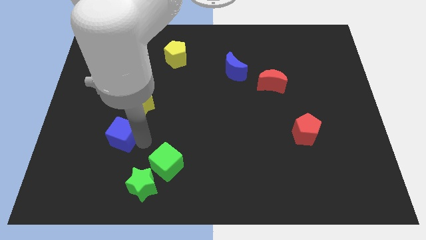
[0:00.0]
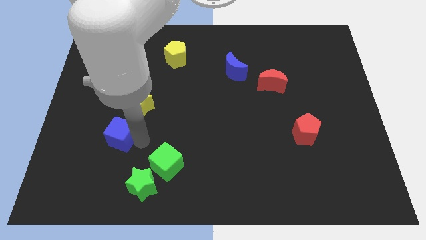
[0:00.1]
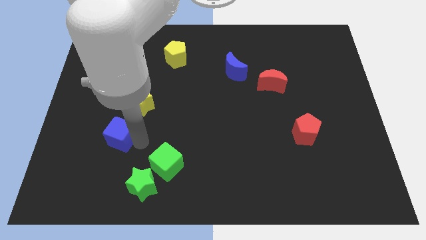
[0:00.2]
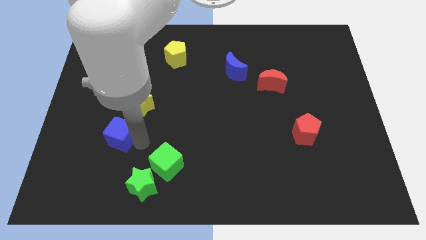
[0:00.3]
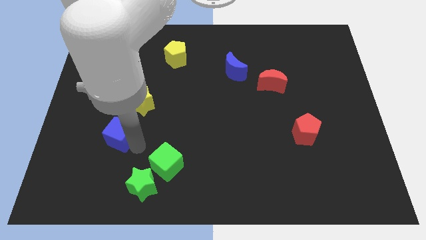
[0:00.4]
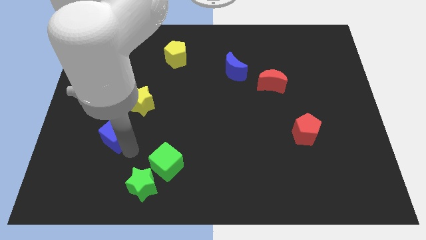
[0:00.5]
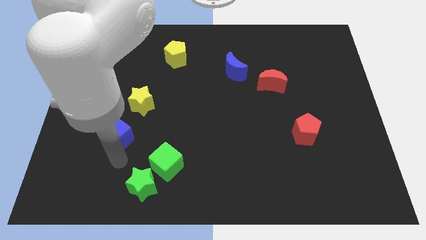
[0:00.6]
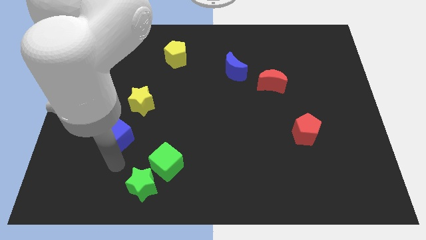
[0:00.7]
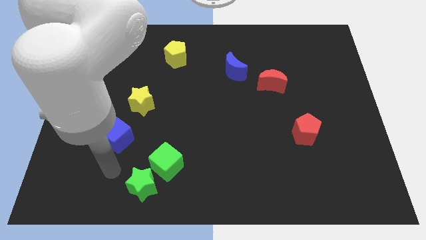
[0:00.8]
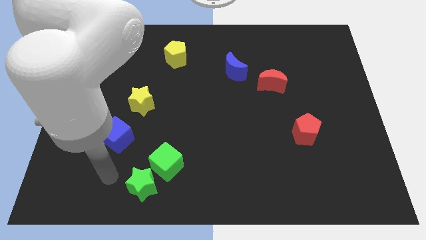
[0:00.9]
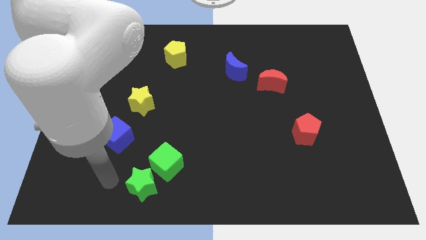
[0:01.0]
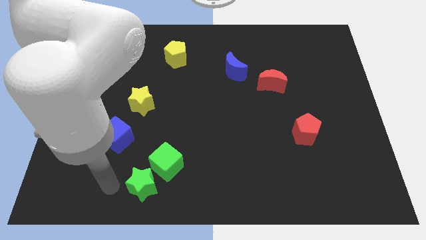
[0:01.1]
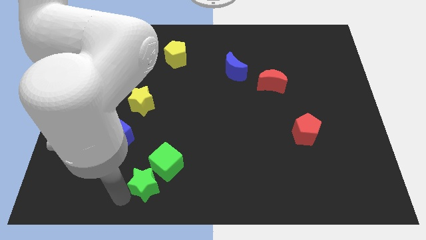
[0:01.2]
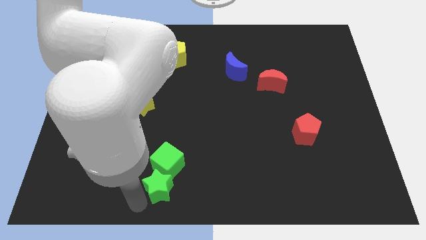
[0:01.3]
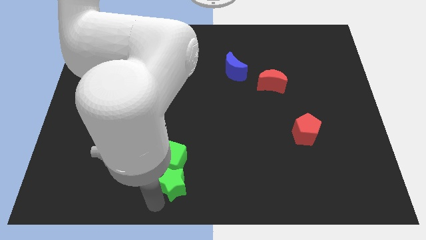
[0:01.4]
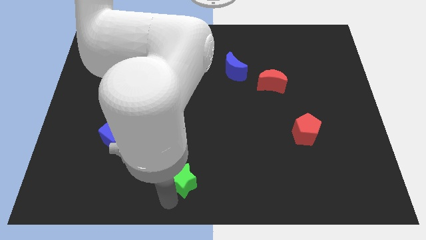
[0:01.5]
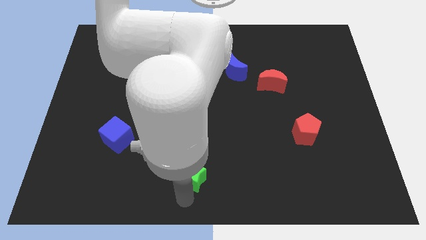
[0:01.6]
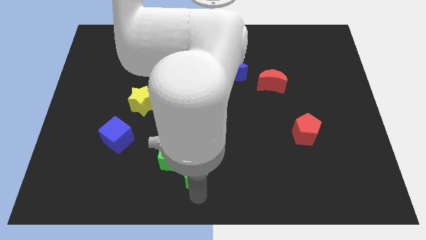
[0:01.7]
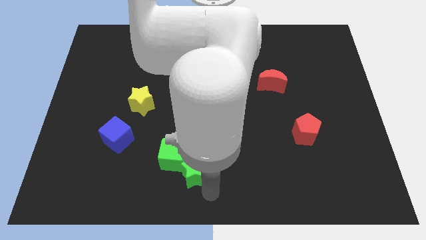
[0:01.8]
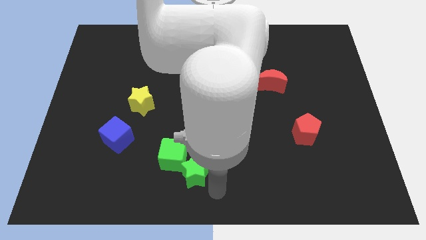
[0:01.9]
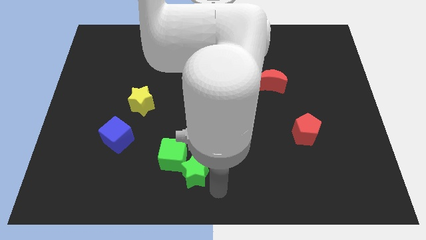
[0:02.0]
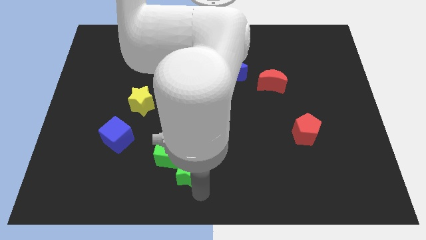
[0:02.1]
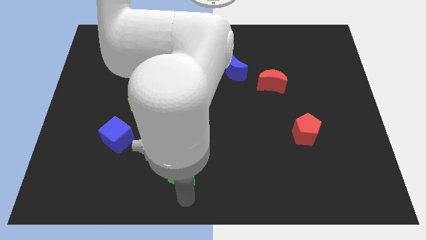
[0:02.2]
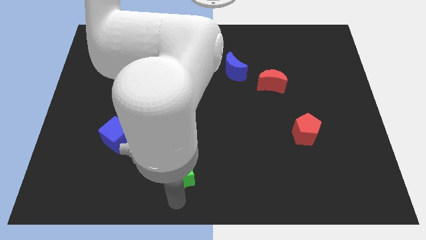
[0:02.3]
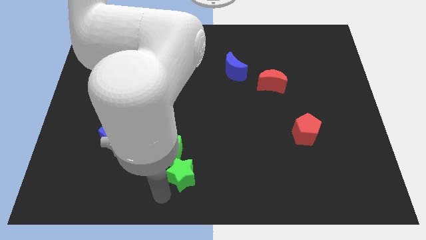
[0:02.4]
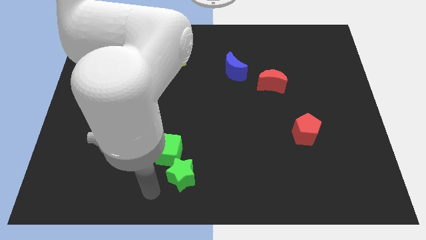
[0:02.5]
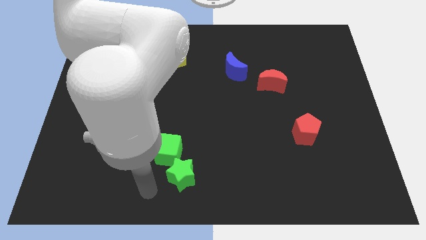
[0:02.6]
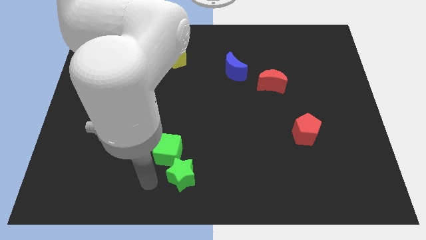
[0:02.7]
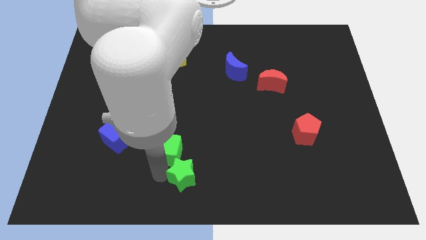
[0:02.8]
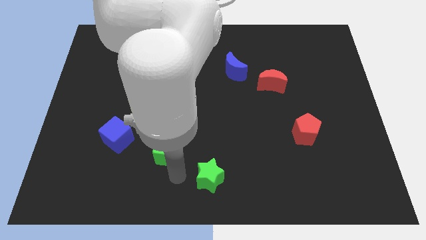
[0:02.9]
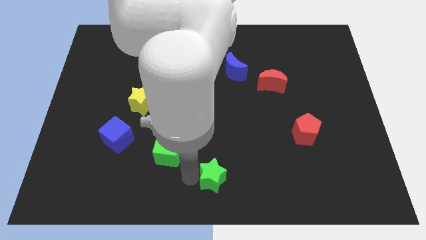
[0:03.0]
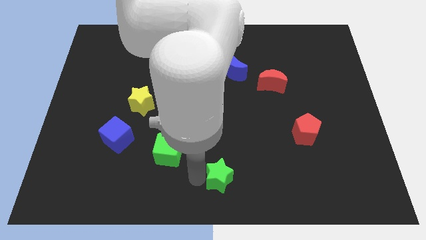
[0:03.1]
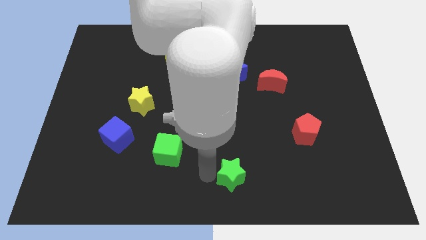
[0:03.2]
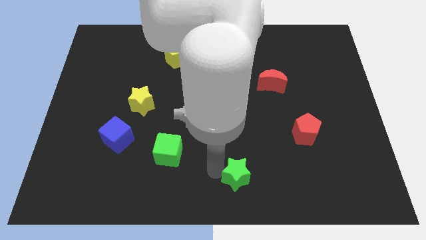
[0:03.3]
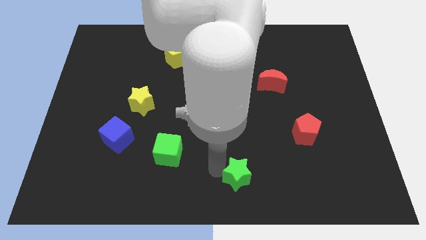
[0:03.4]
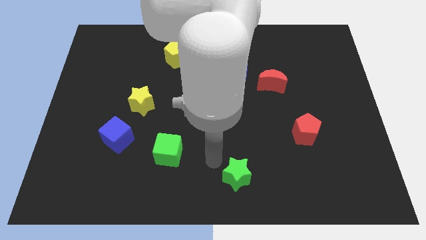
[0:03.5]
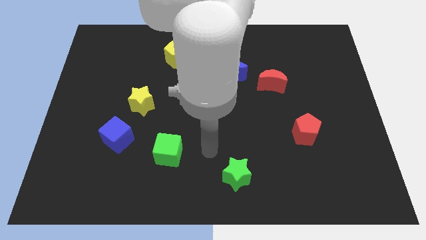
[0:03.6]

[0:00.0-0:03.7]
put the green star vertically bottom of the blue moon

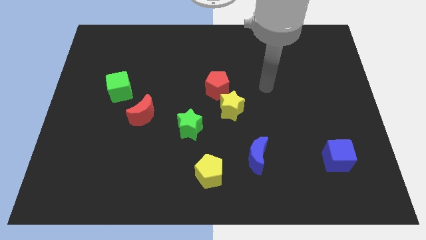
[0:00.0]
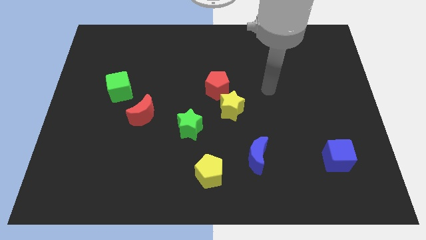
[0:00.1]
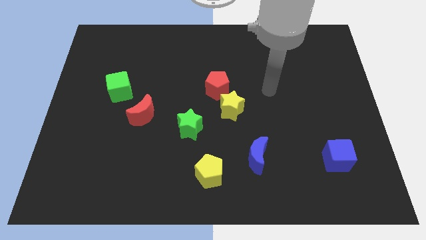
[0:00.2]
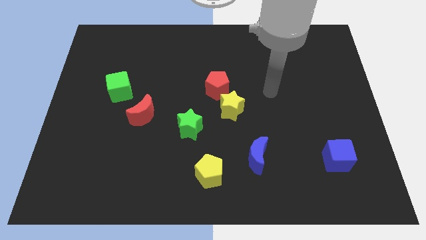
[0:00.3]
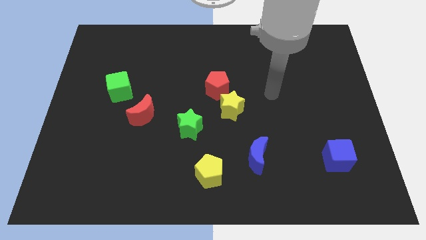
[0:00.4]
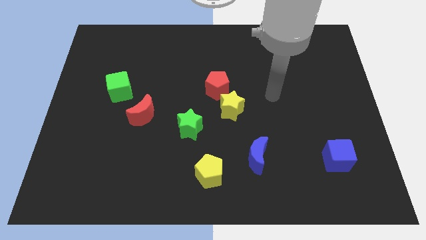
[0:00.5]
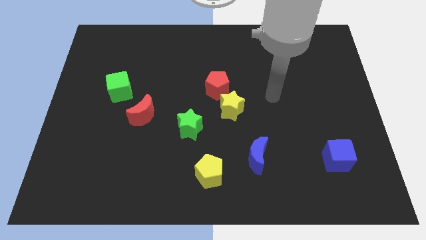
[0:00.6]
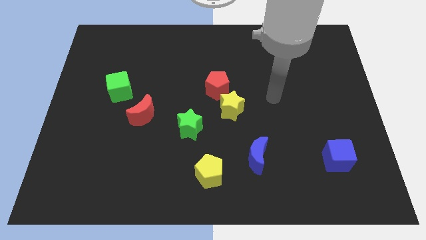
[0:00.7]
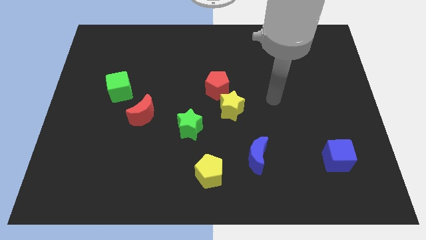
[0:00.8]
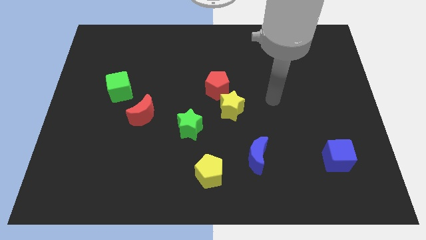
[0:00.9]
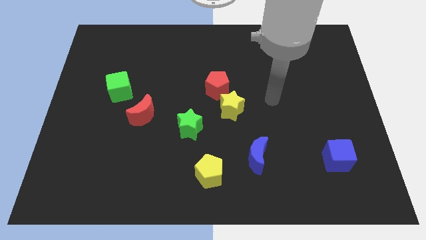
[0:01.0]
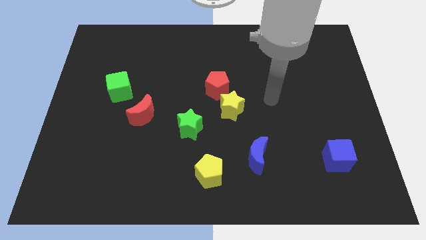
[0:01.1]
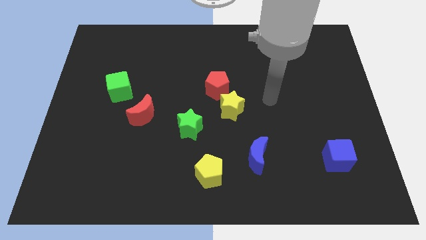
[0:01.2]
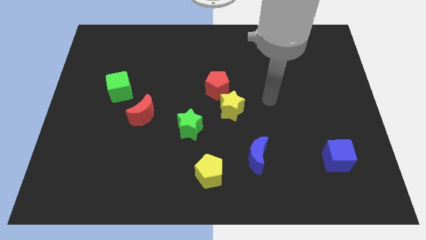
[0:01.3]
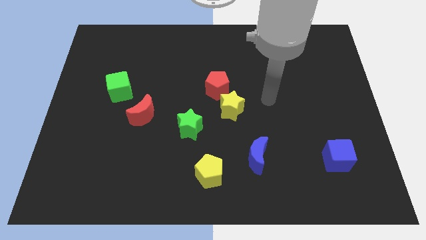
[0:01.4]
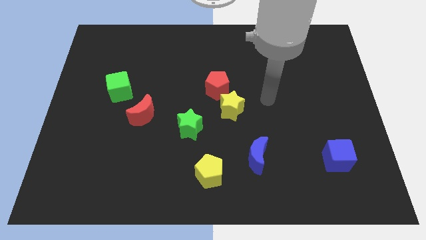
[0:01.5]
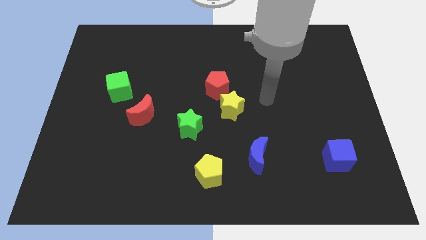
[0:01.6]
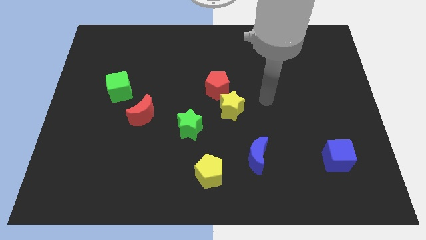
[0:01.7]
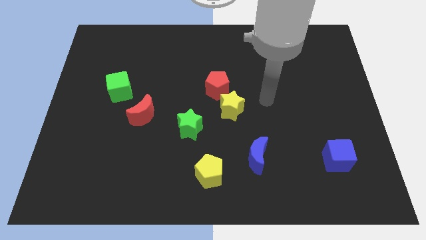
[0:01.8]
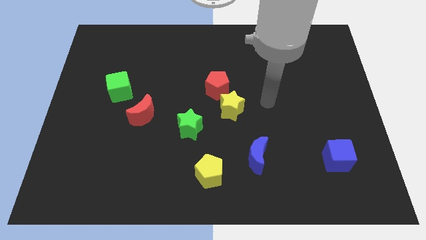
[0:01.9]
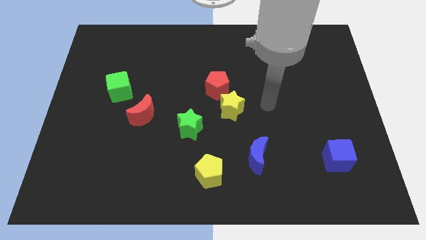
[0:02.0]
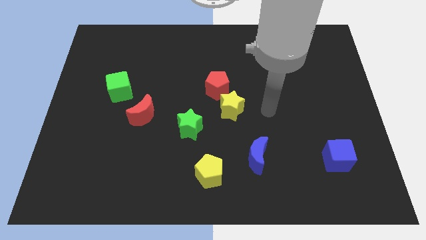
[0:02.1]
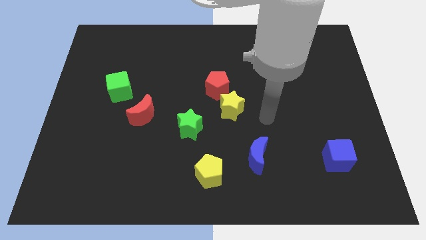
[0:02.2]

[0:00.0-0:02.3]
place arm on the top of blue crescent

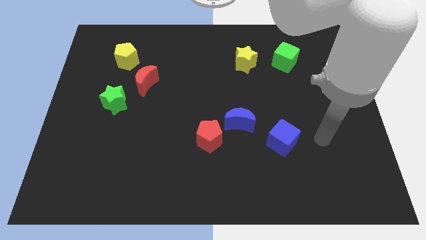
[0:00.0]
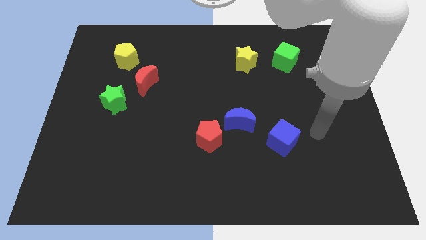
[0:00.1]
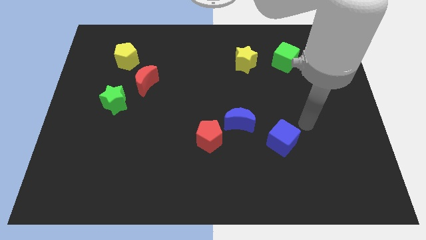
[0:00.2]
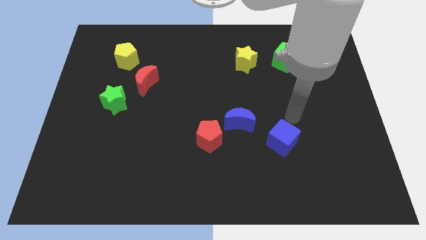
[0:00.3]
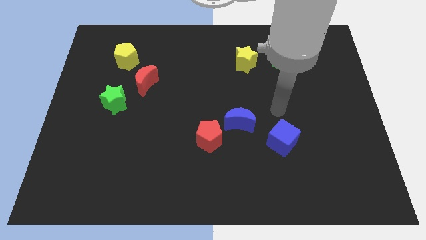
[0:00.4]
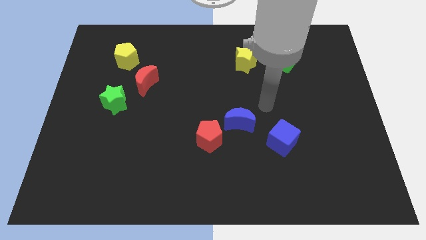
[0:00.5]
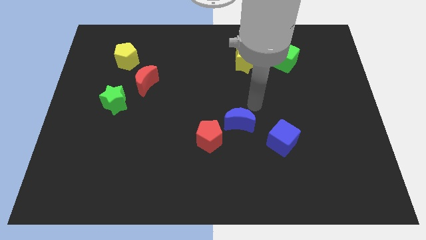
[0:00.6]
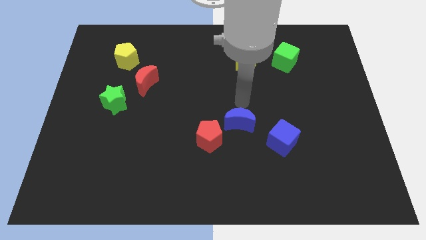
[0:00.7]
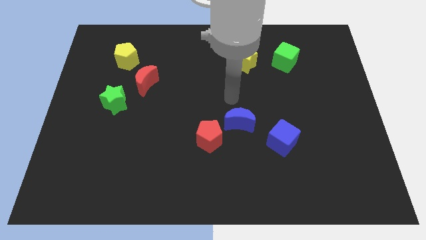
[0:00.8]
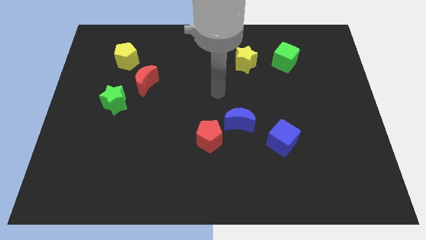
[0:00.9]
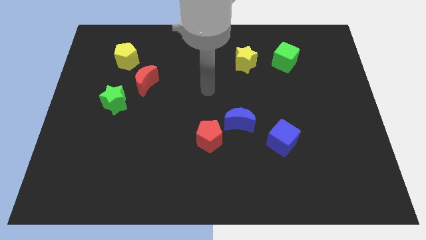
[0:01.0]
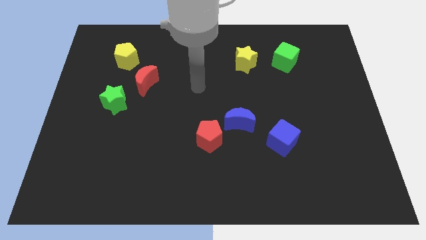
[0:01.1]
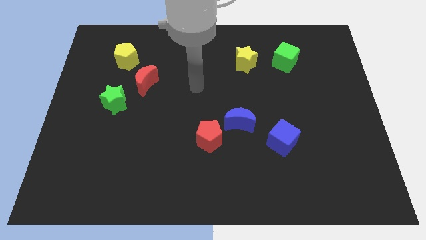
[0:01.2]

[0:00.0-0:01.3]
place the arm at center of the board

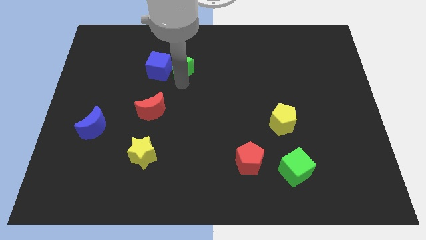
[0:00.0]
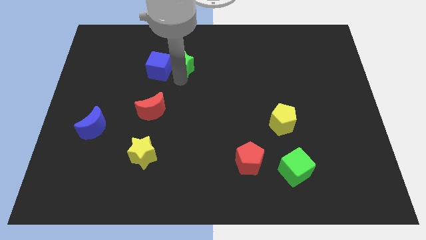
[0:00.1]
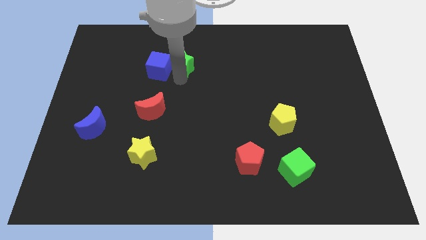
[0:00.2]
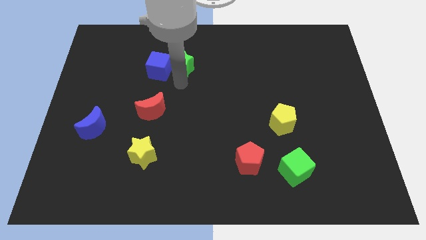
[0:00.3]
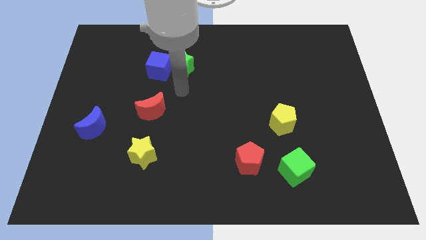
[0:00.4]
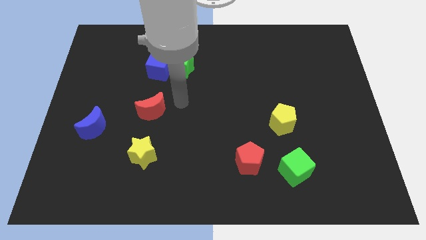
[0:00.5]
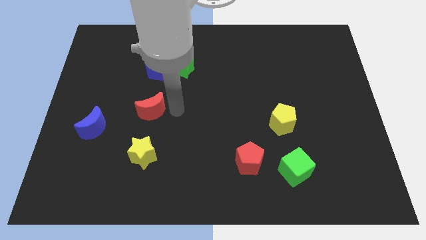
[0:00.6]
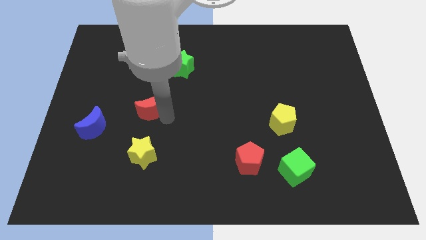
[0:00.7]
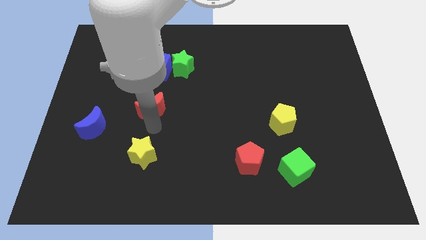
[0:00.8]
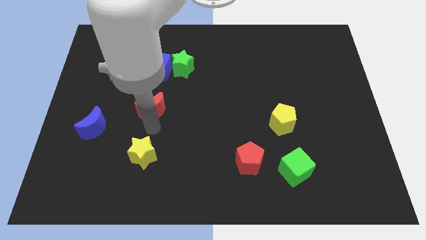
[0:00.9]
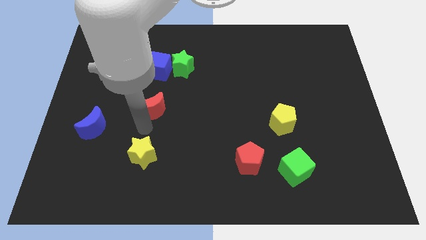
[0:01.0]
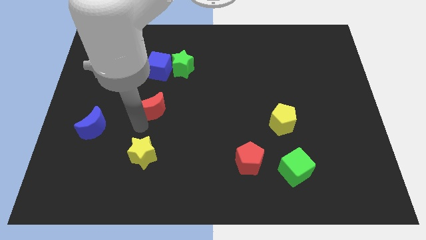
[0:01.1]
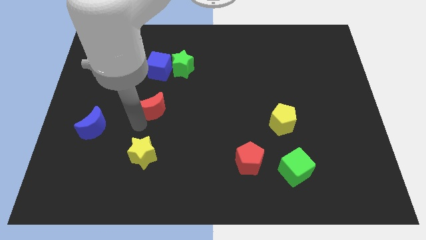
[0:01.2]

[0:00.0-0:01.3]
move the arm below to the red moon

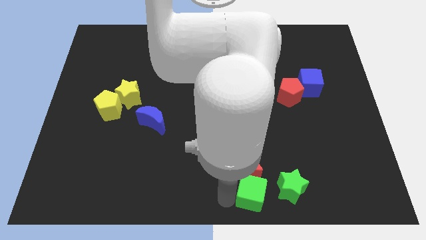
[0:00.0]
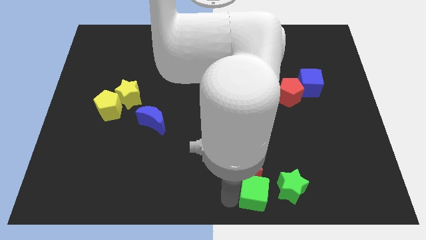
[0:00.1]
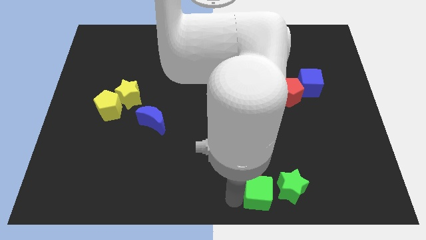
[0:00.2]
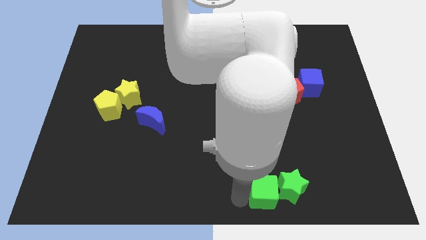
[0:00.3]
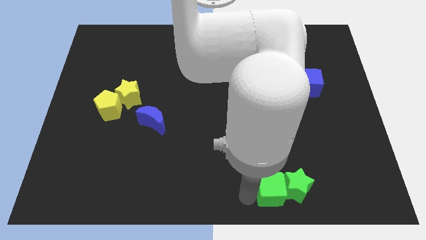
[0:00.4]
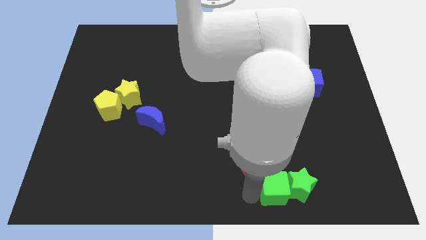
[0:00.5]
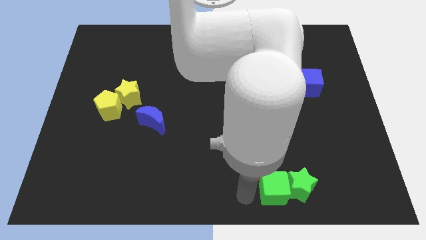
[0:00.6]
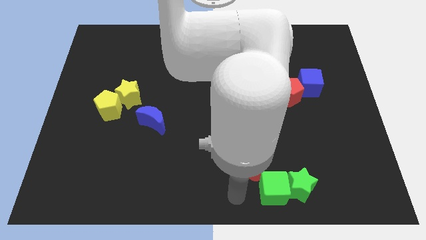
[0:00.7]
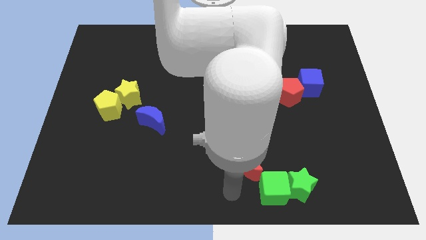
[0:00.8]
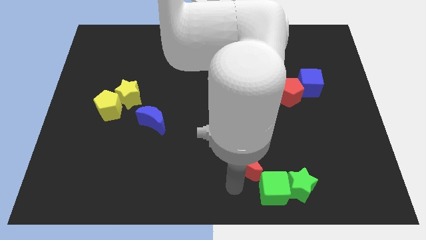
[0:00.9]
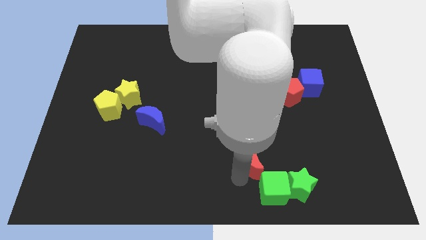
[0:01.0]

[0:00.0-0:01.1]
push the green cube into the green star
